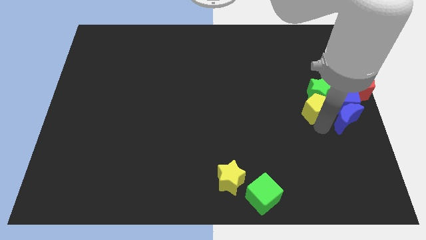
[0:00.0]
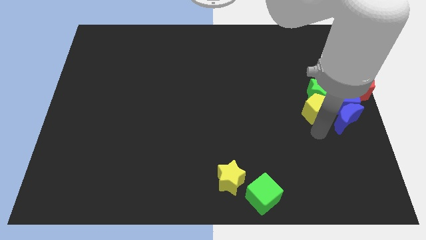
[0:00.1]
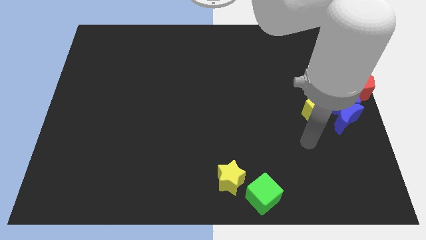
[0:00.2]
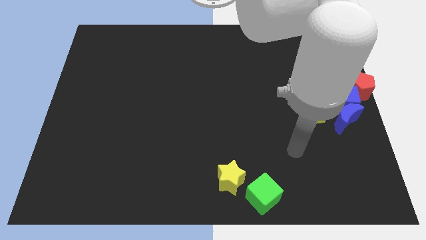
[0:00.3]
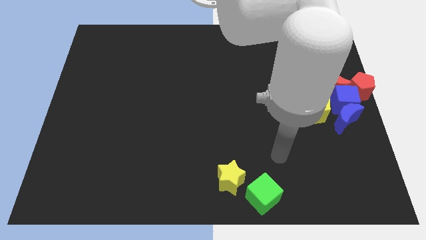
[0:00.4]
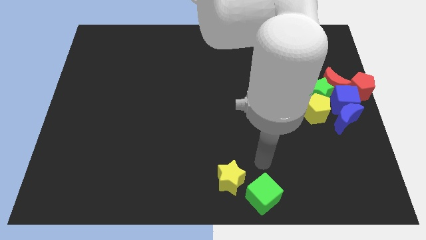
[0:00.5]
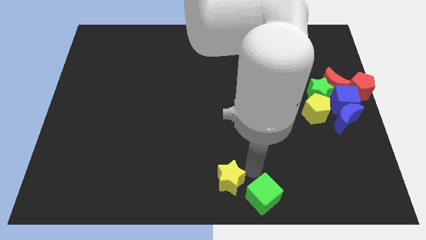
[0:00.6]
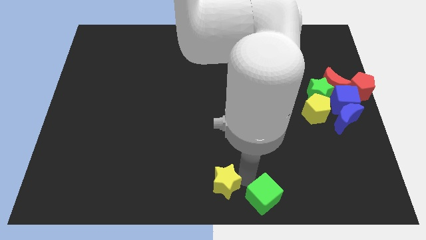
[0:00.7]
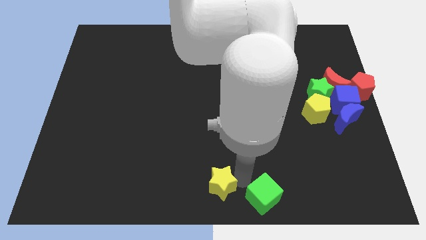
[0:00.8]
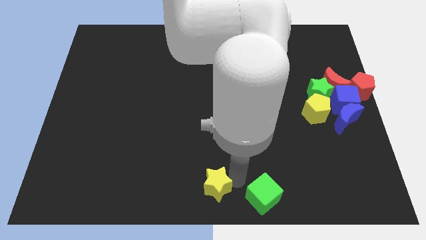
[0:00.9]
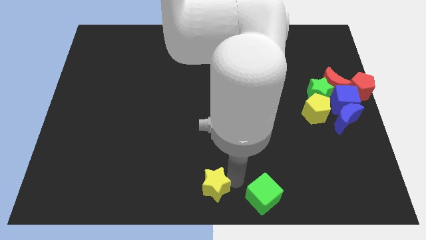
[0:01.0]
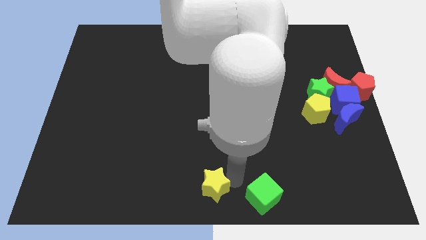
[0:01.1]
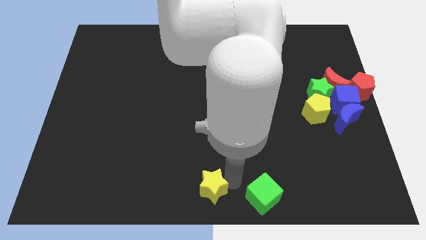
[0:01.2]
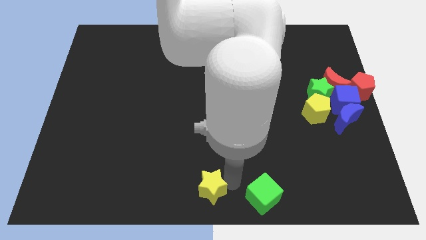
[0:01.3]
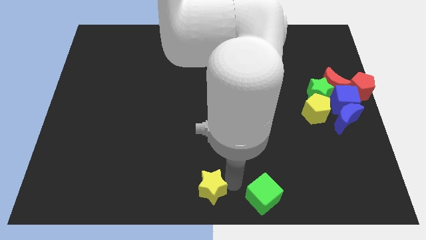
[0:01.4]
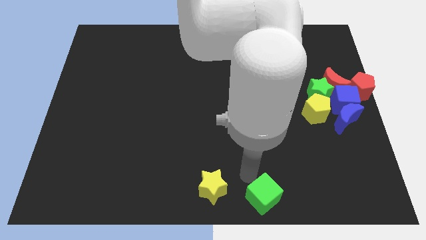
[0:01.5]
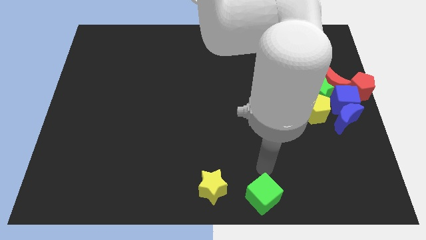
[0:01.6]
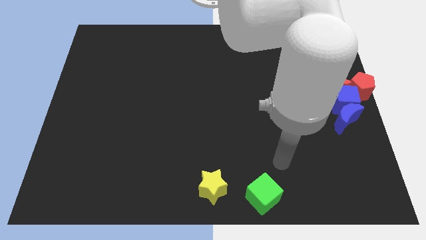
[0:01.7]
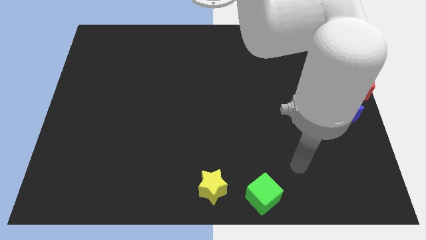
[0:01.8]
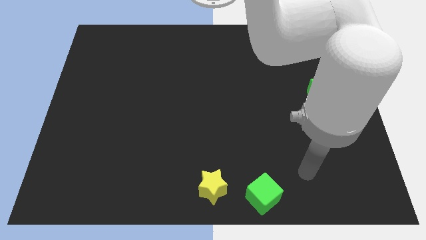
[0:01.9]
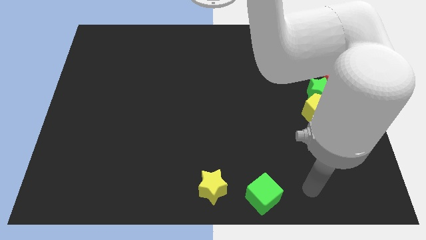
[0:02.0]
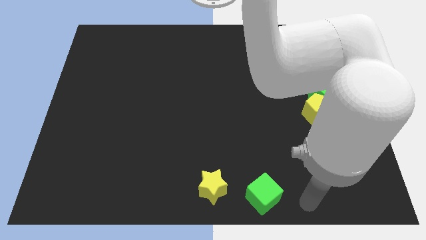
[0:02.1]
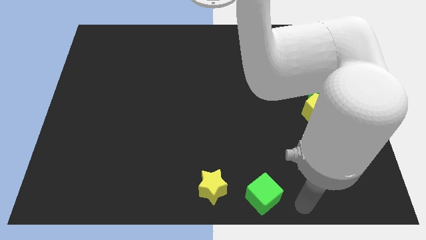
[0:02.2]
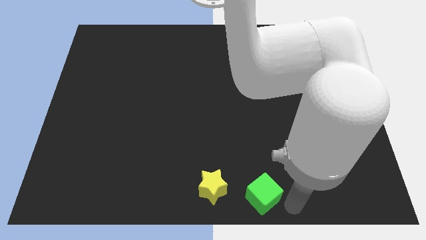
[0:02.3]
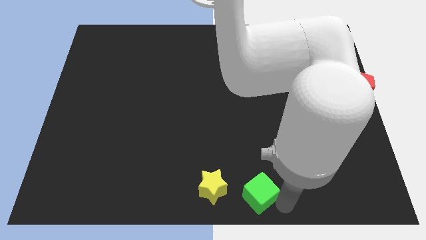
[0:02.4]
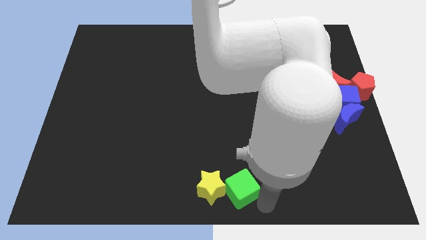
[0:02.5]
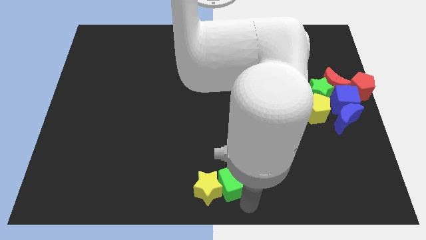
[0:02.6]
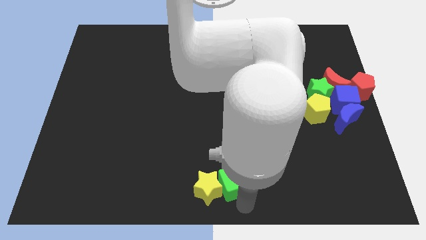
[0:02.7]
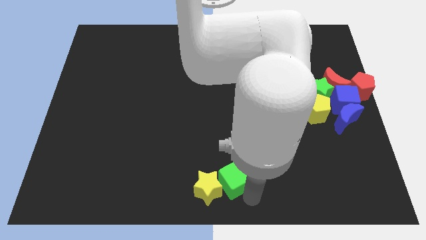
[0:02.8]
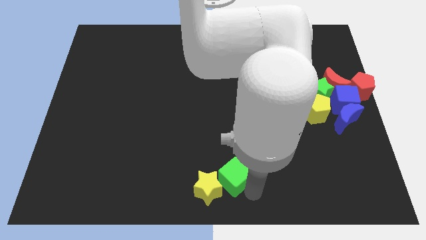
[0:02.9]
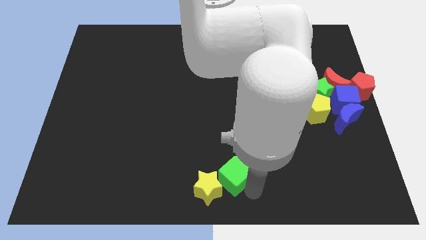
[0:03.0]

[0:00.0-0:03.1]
move the green cube and yellow star towards the bottom center of the board

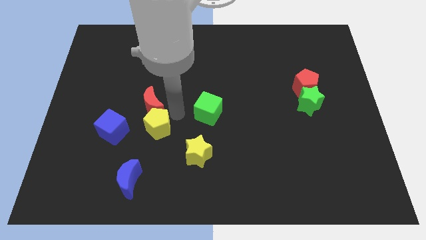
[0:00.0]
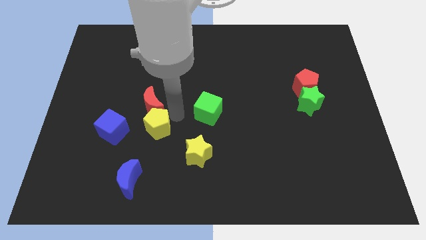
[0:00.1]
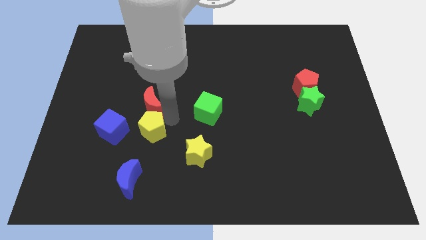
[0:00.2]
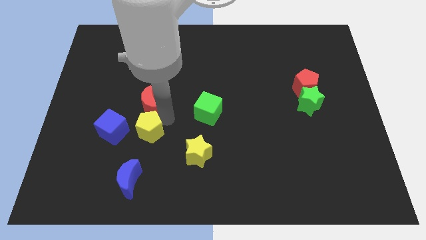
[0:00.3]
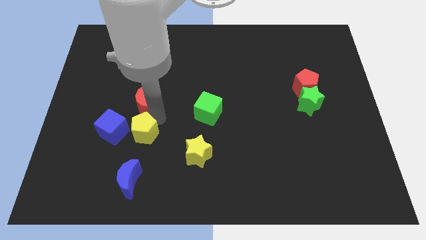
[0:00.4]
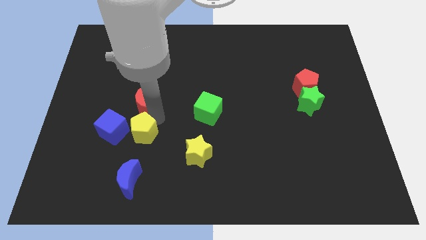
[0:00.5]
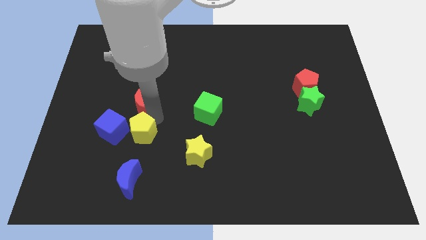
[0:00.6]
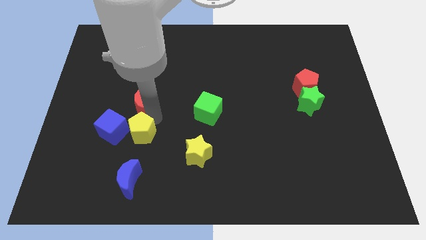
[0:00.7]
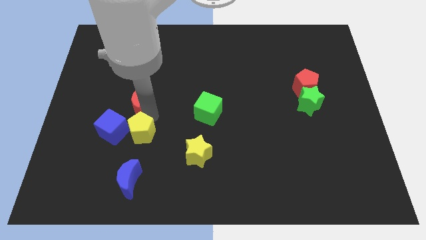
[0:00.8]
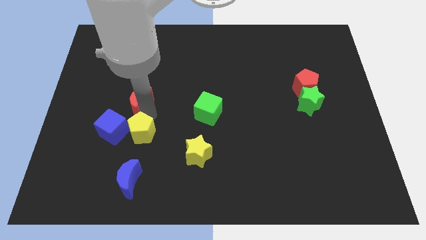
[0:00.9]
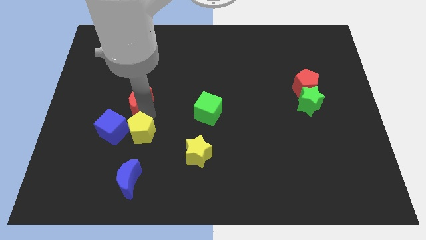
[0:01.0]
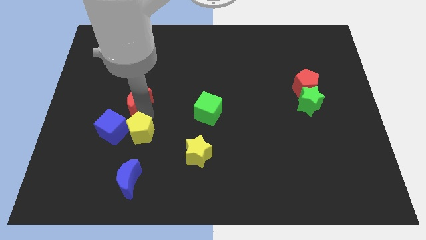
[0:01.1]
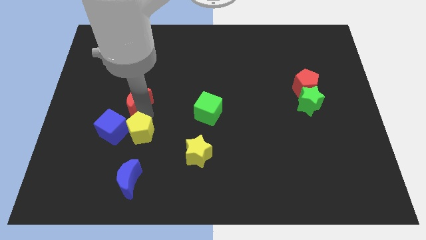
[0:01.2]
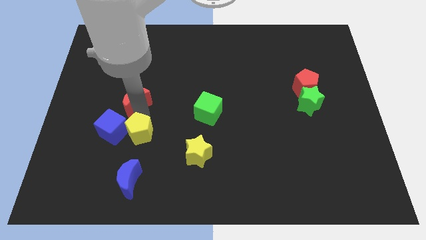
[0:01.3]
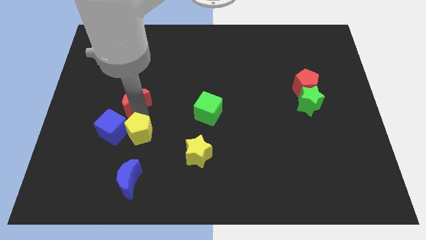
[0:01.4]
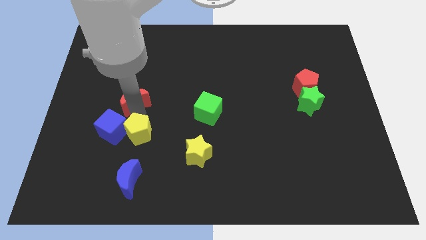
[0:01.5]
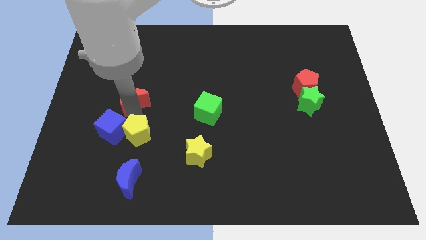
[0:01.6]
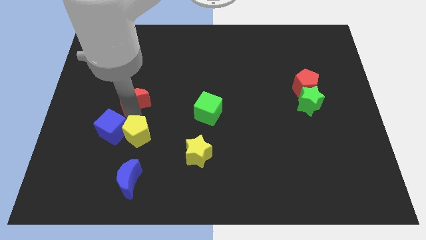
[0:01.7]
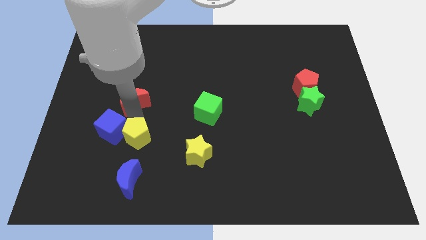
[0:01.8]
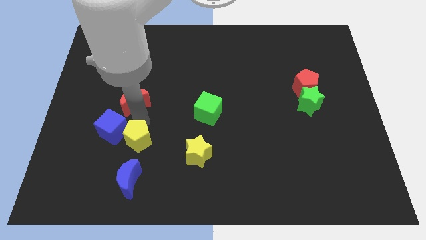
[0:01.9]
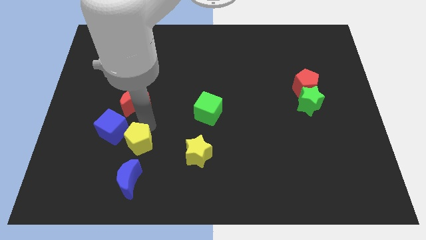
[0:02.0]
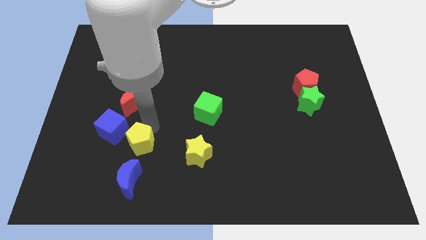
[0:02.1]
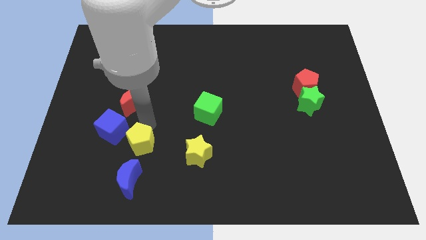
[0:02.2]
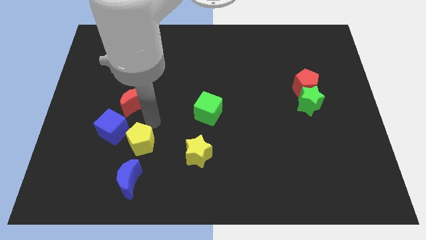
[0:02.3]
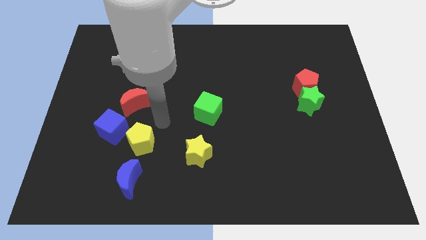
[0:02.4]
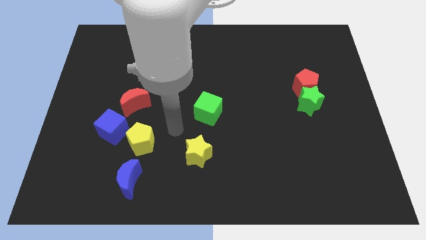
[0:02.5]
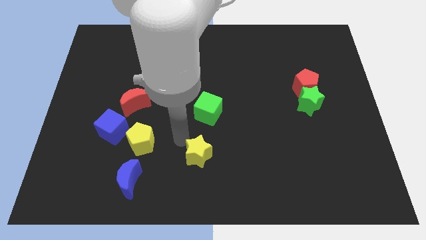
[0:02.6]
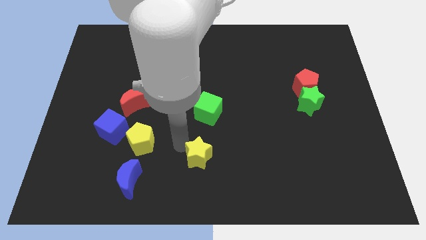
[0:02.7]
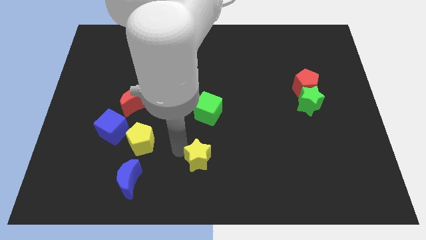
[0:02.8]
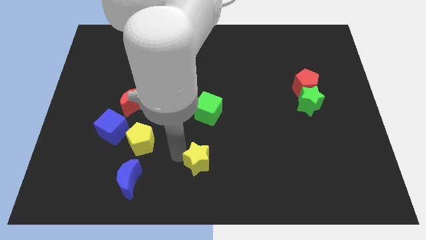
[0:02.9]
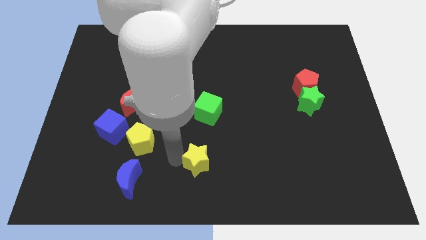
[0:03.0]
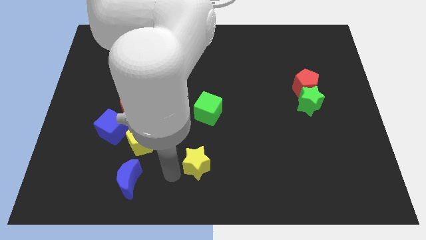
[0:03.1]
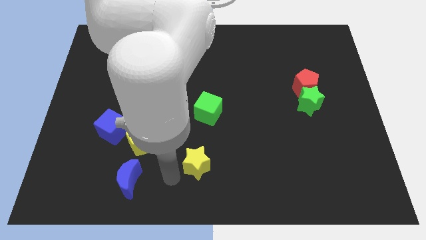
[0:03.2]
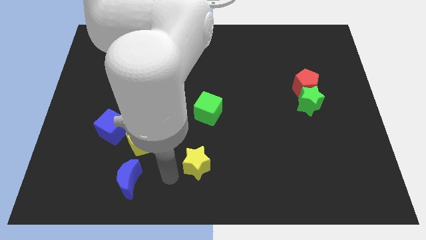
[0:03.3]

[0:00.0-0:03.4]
push the yellow pentagon into the blue cube

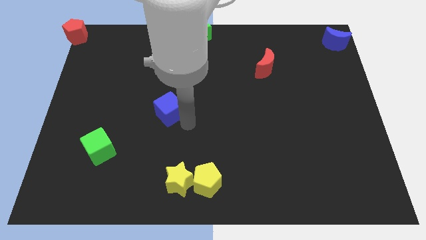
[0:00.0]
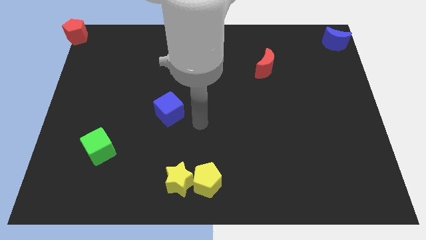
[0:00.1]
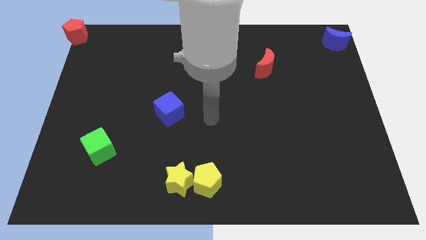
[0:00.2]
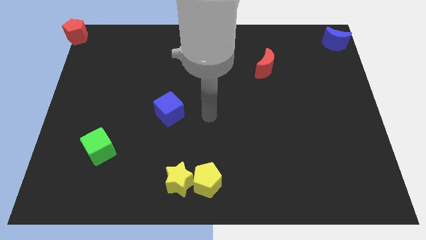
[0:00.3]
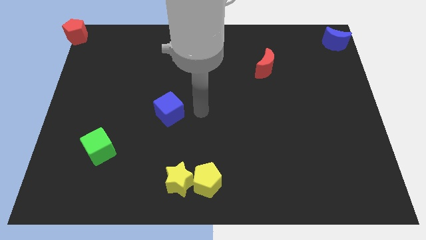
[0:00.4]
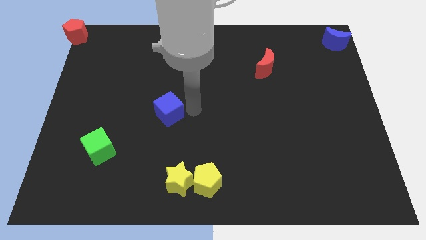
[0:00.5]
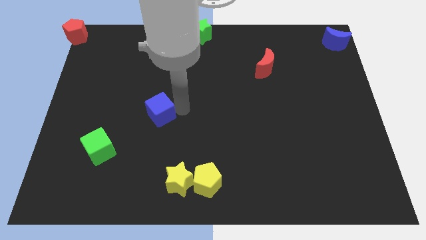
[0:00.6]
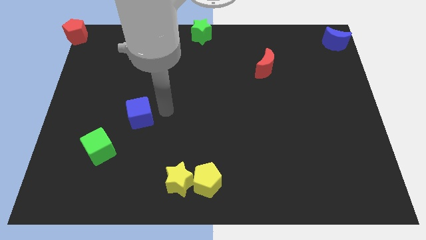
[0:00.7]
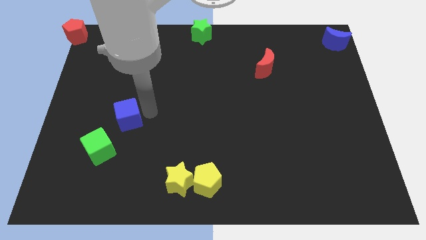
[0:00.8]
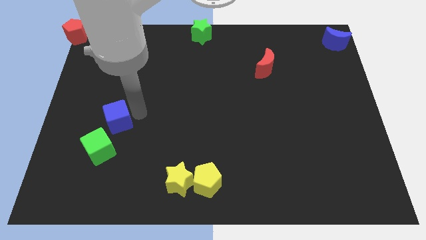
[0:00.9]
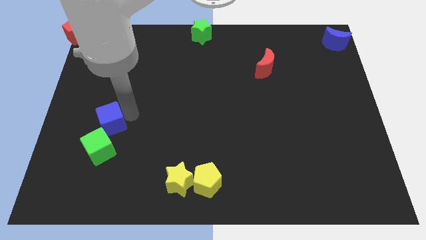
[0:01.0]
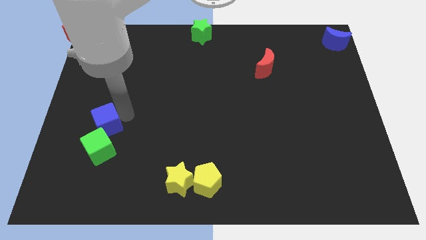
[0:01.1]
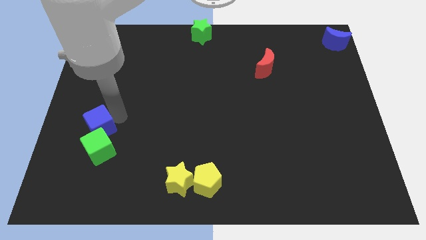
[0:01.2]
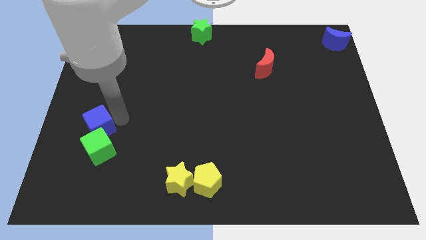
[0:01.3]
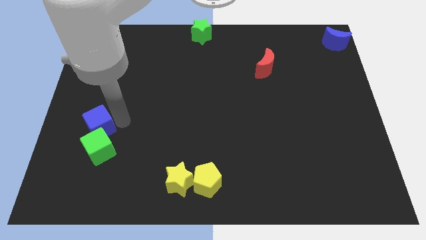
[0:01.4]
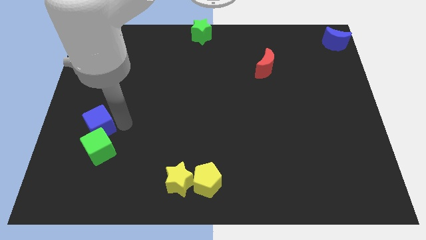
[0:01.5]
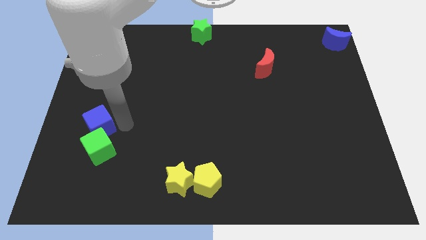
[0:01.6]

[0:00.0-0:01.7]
slide the blue cube above the green cube

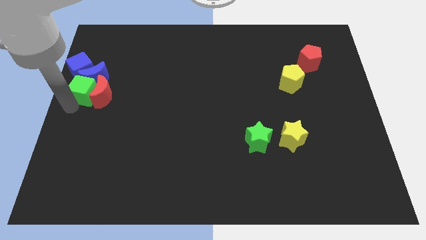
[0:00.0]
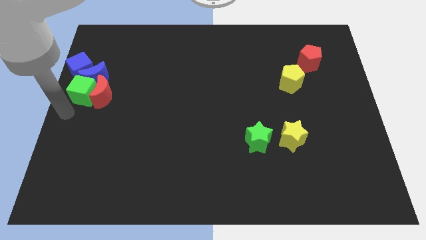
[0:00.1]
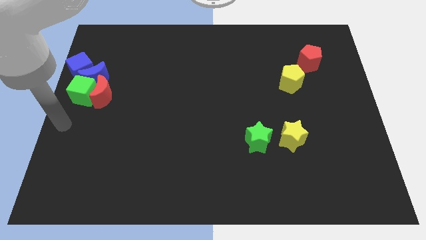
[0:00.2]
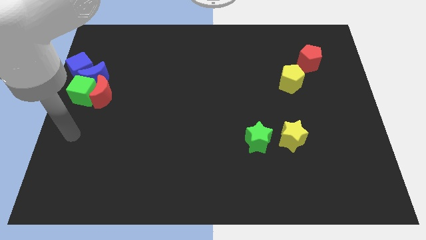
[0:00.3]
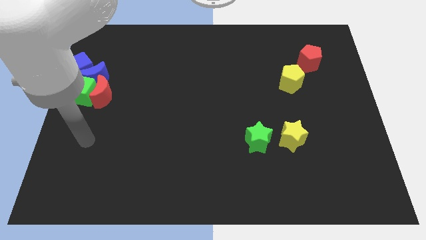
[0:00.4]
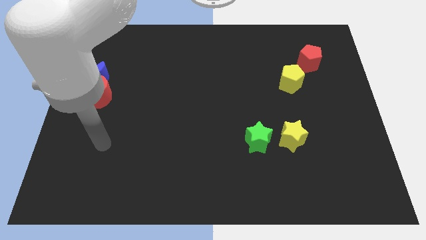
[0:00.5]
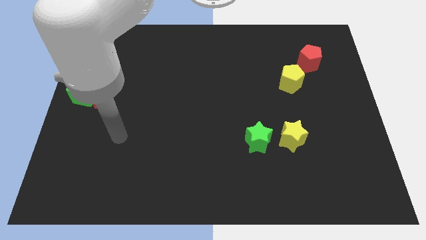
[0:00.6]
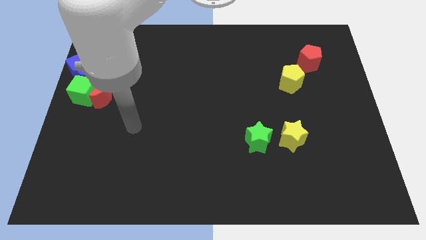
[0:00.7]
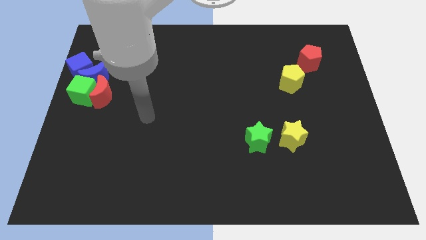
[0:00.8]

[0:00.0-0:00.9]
move the arm away from the green cube
